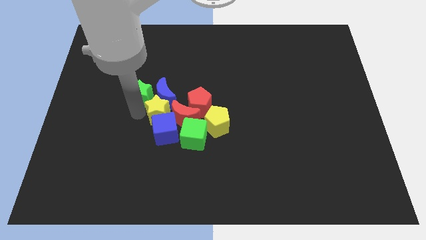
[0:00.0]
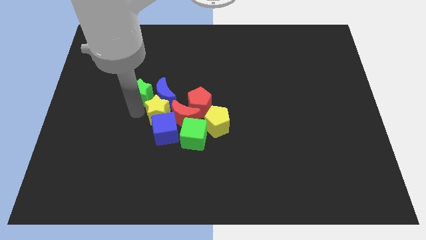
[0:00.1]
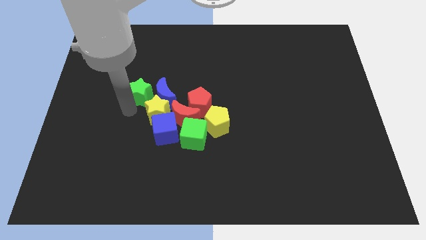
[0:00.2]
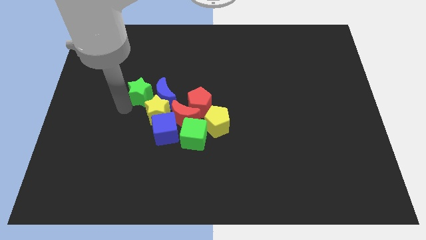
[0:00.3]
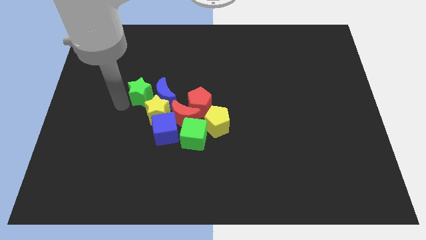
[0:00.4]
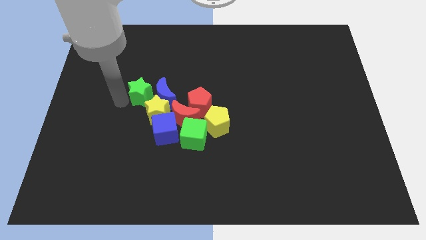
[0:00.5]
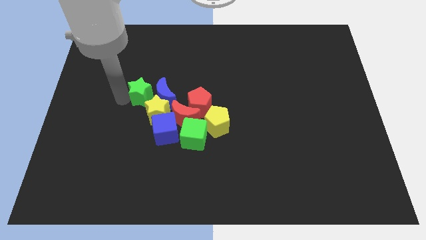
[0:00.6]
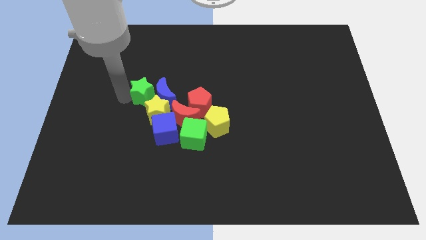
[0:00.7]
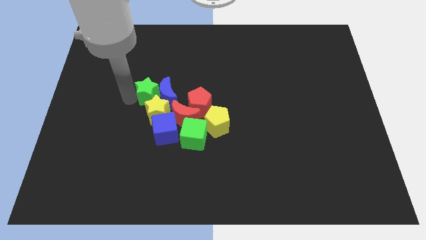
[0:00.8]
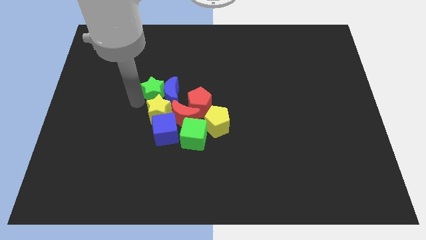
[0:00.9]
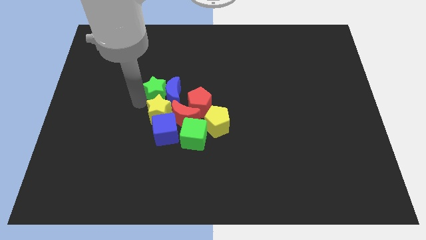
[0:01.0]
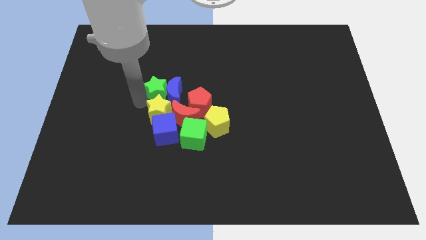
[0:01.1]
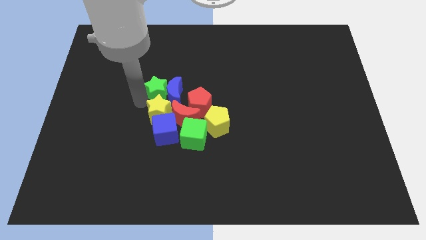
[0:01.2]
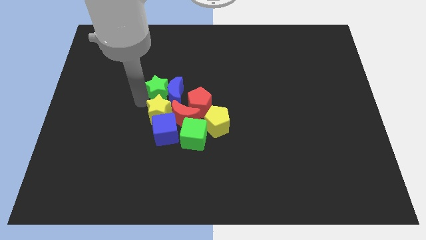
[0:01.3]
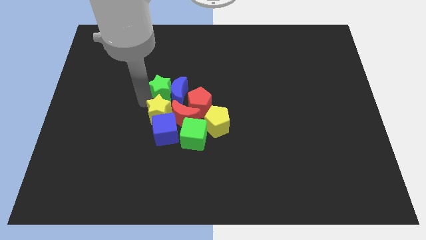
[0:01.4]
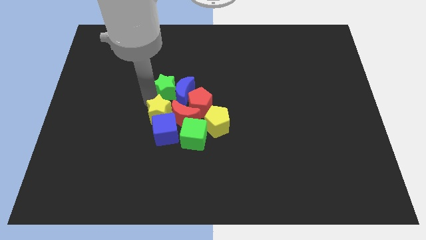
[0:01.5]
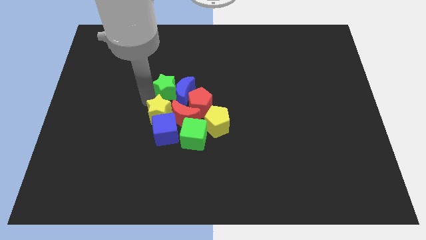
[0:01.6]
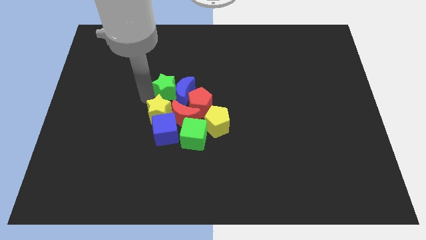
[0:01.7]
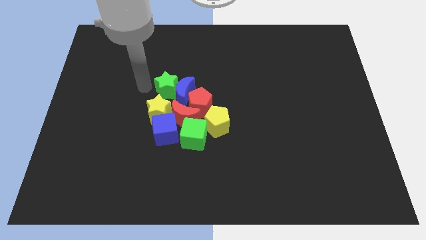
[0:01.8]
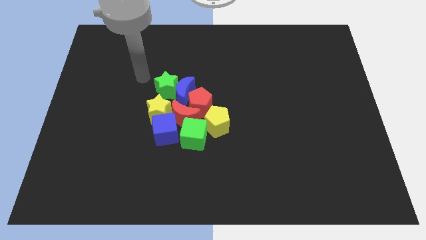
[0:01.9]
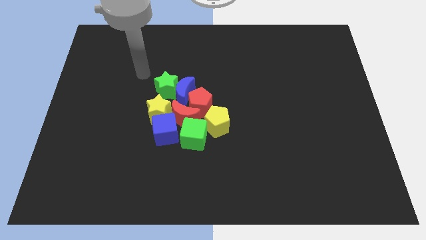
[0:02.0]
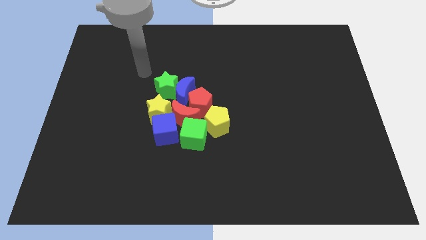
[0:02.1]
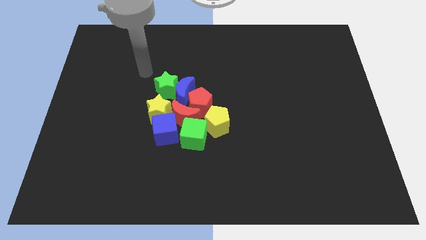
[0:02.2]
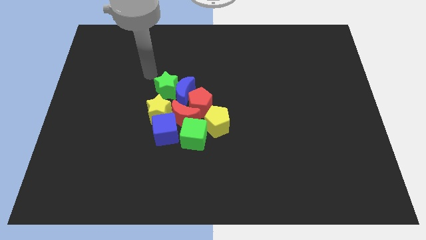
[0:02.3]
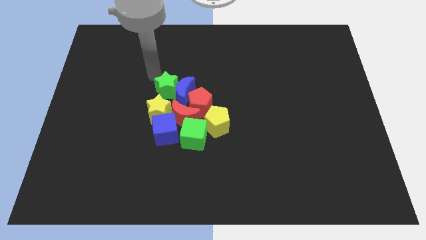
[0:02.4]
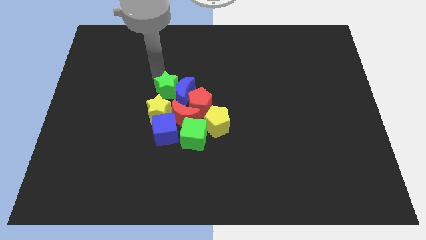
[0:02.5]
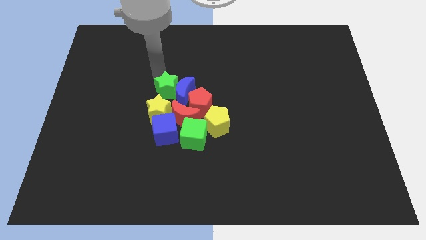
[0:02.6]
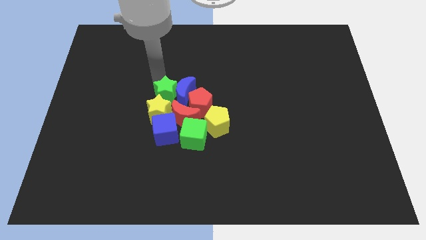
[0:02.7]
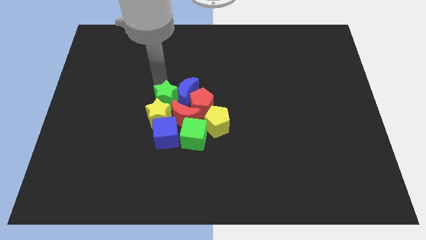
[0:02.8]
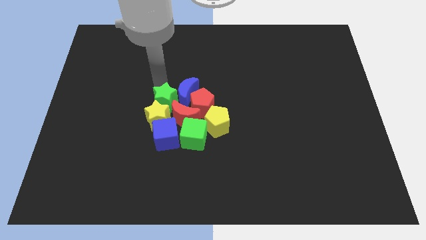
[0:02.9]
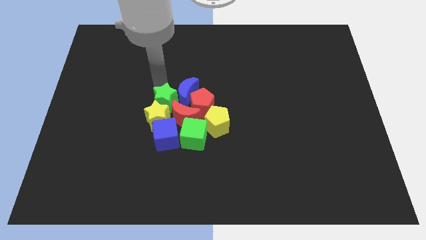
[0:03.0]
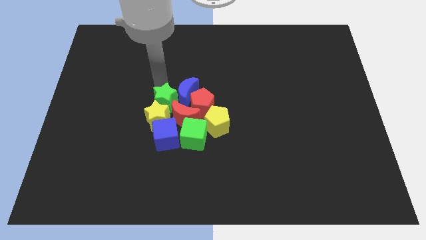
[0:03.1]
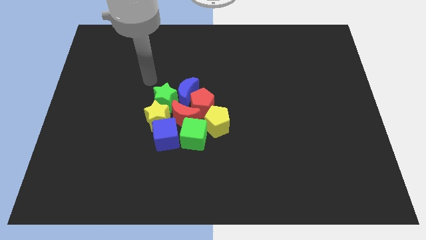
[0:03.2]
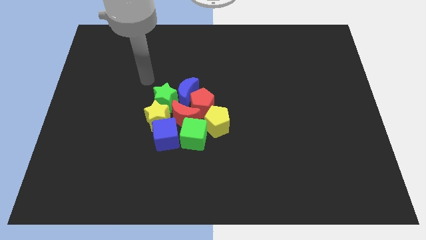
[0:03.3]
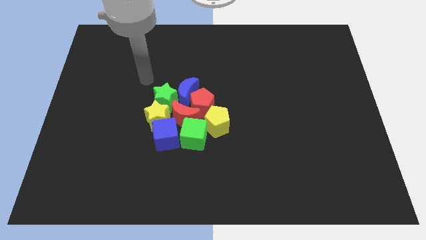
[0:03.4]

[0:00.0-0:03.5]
push the green star to the top of the yellow star

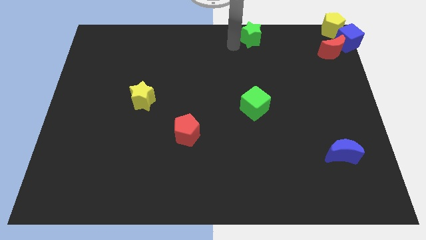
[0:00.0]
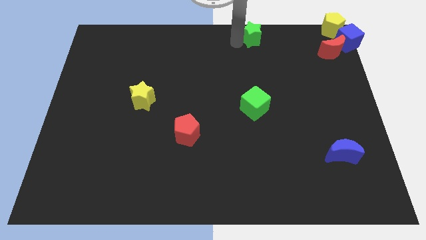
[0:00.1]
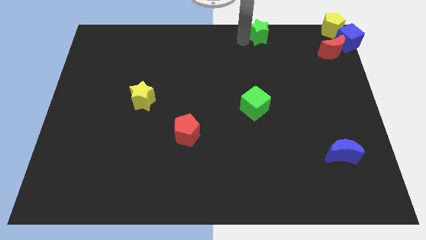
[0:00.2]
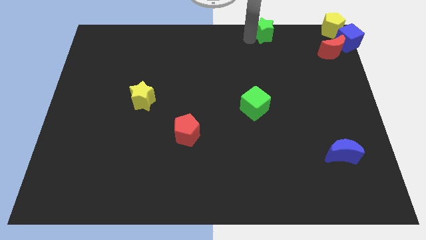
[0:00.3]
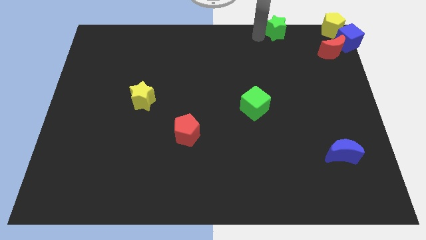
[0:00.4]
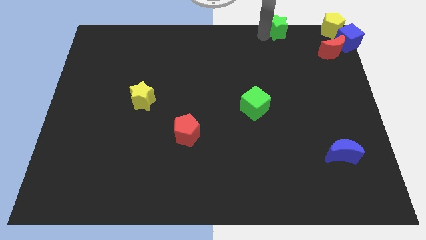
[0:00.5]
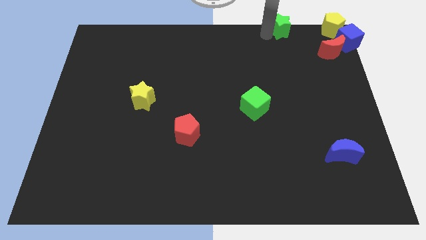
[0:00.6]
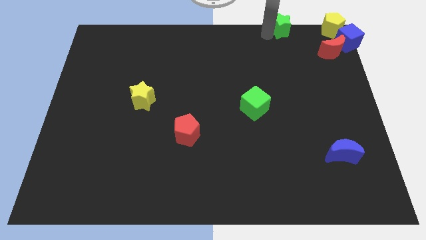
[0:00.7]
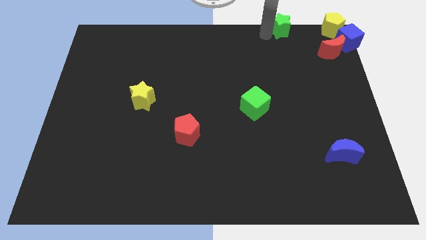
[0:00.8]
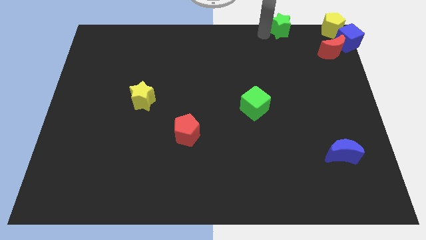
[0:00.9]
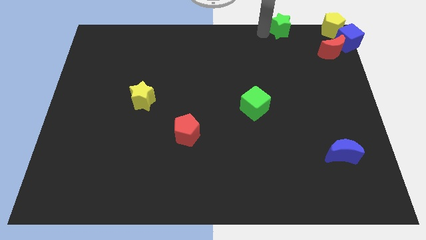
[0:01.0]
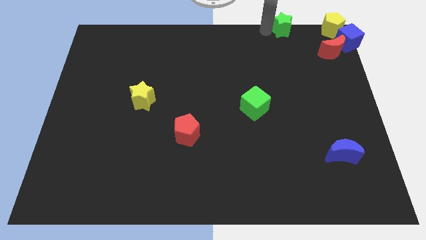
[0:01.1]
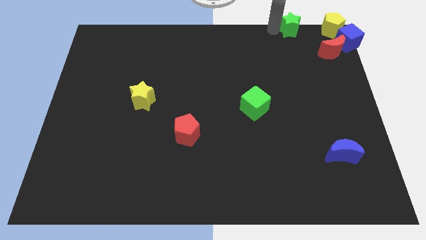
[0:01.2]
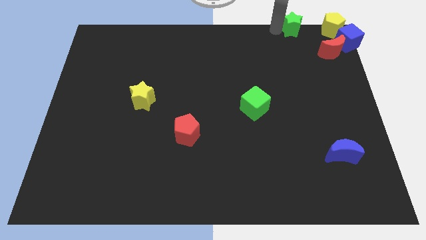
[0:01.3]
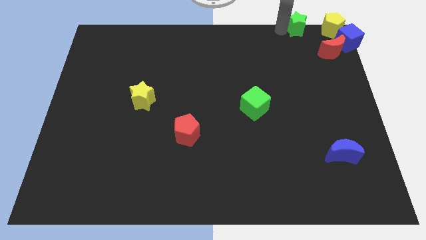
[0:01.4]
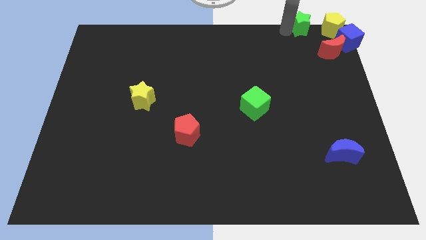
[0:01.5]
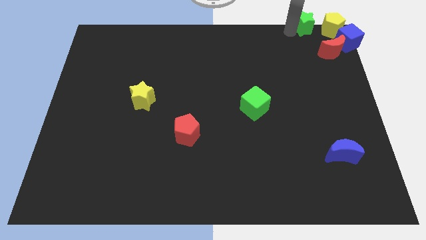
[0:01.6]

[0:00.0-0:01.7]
push the green star towards the group of blocks at the top right corner of the board

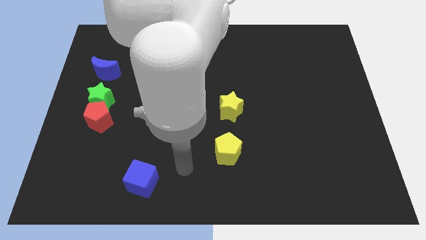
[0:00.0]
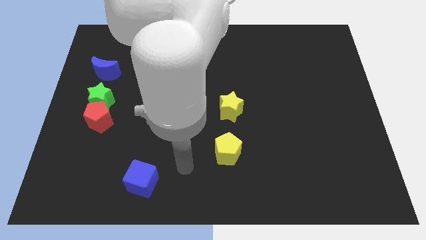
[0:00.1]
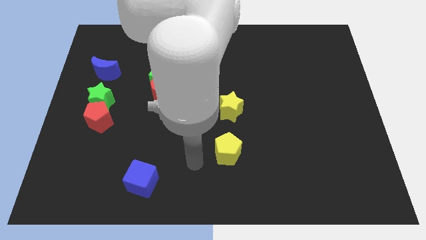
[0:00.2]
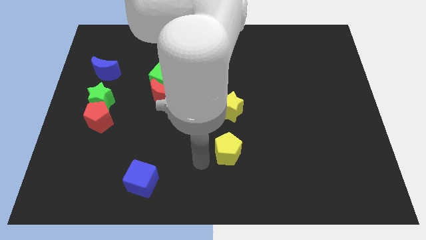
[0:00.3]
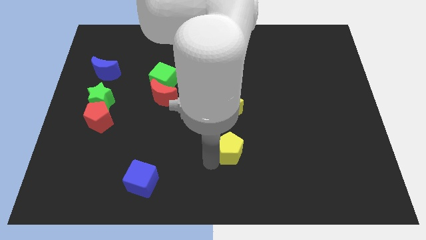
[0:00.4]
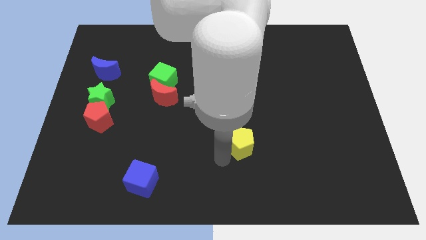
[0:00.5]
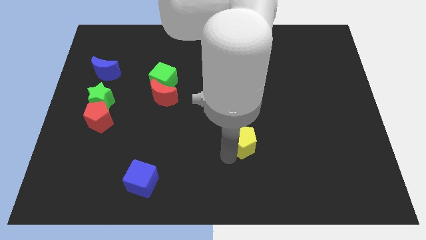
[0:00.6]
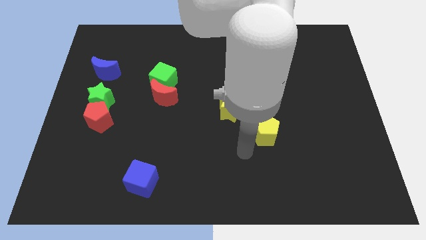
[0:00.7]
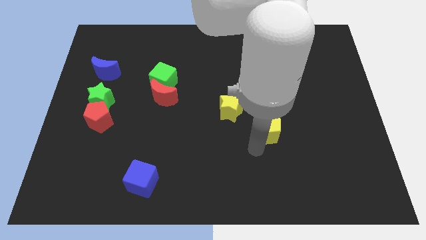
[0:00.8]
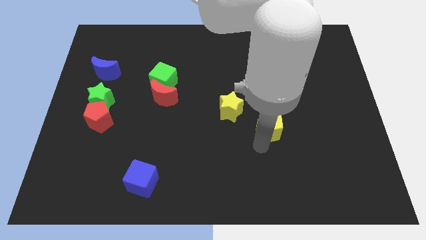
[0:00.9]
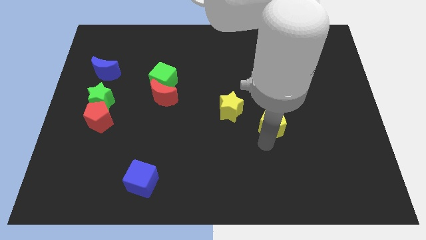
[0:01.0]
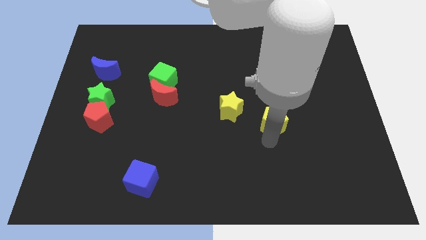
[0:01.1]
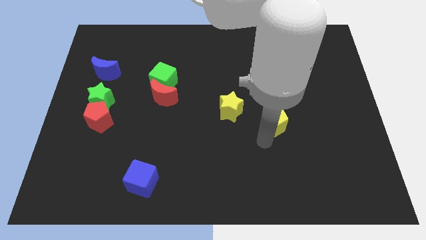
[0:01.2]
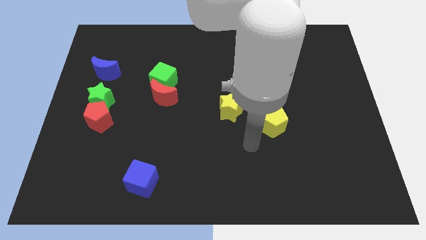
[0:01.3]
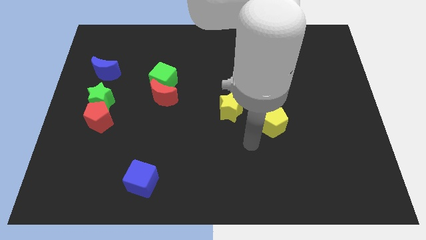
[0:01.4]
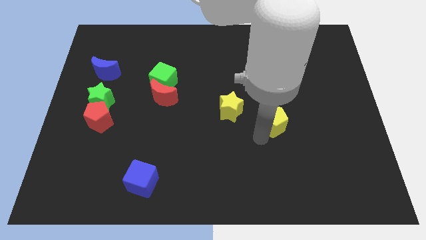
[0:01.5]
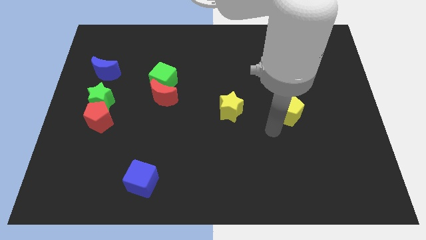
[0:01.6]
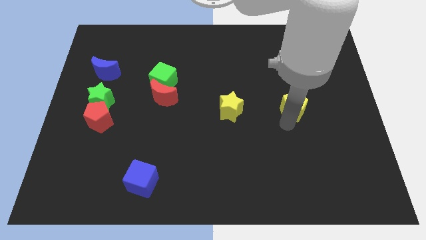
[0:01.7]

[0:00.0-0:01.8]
move the yellow pentagon parallel to the yellow star

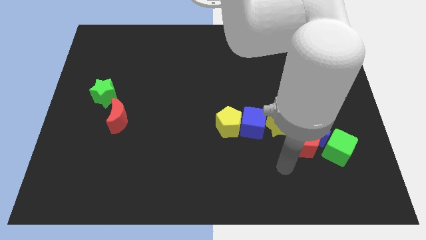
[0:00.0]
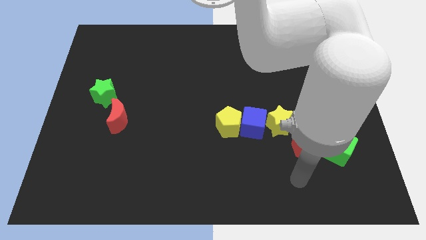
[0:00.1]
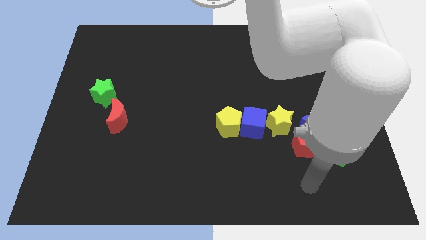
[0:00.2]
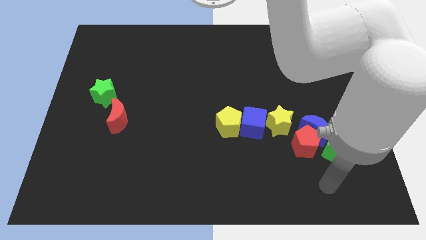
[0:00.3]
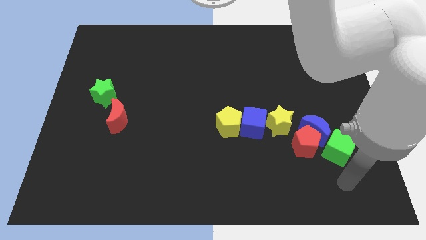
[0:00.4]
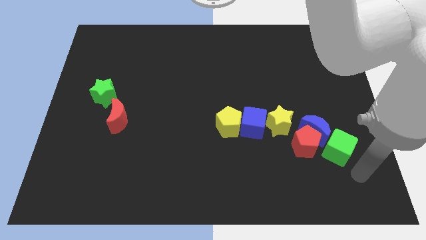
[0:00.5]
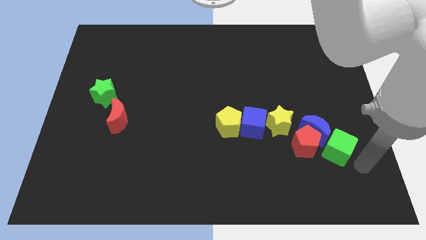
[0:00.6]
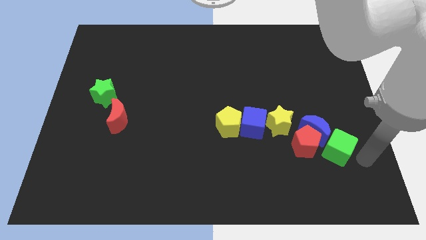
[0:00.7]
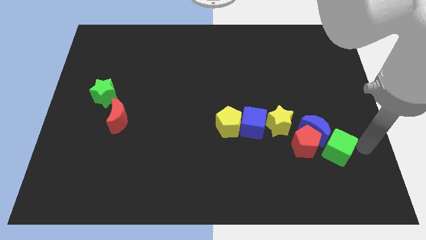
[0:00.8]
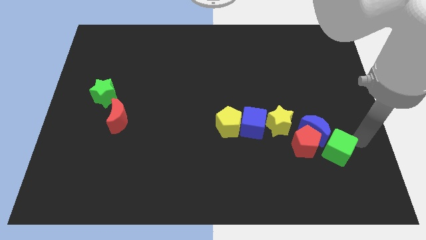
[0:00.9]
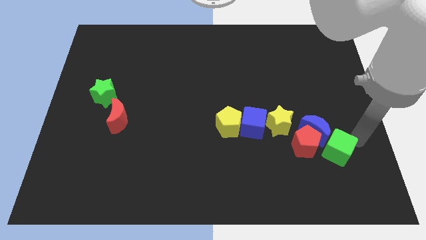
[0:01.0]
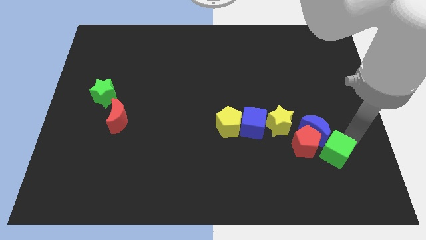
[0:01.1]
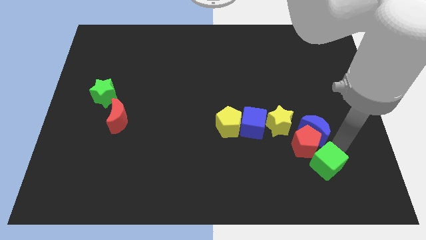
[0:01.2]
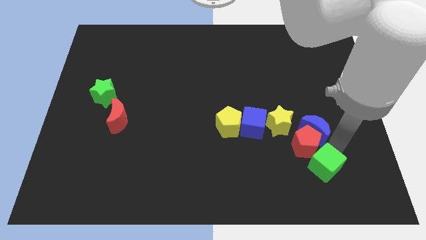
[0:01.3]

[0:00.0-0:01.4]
move the green cube down slightly

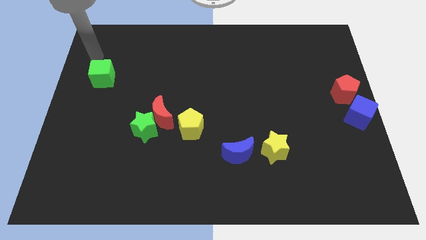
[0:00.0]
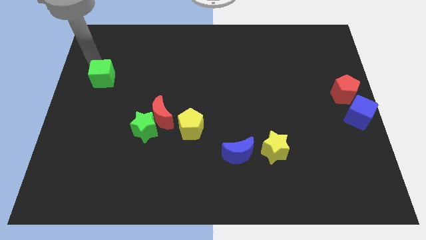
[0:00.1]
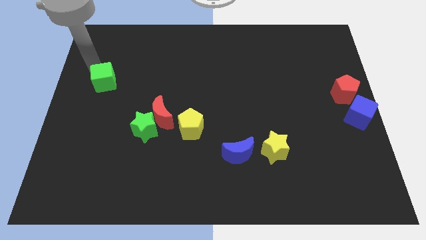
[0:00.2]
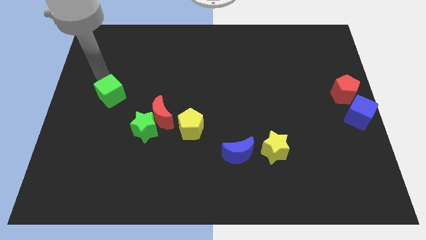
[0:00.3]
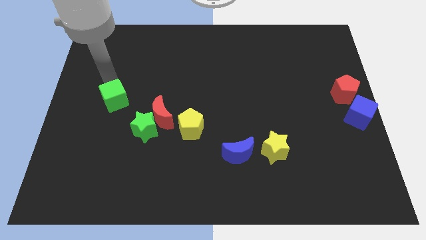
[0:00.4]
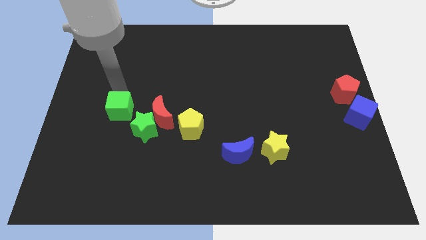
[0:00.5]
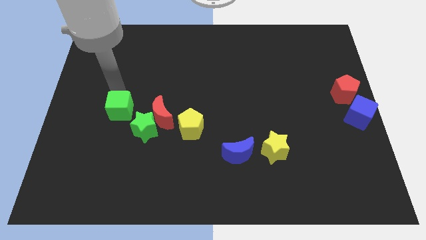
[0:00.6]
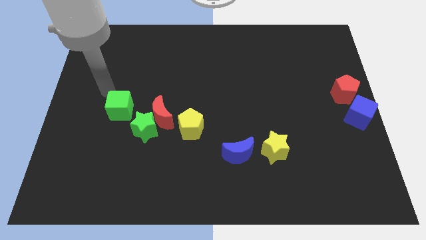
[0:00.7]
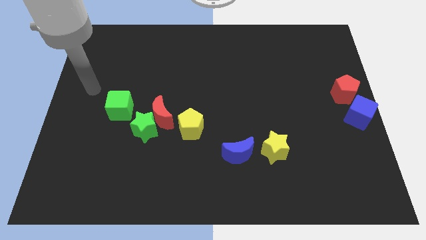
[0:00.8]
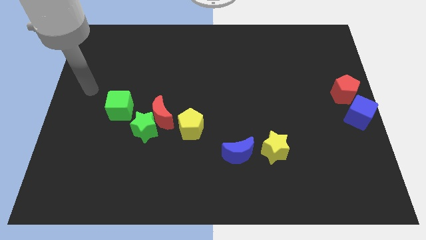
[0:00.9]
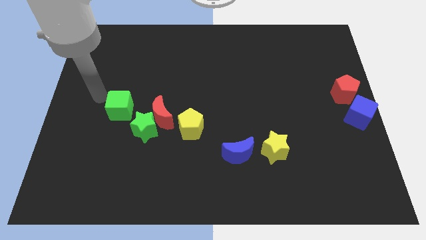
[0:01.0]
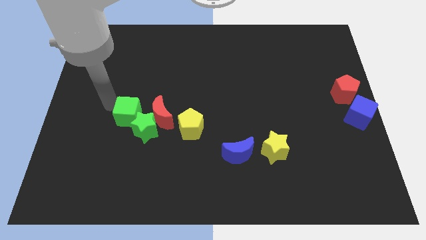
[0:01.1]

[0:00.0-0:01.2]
push green cube into green star
